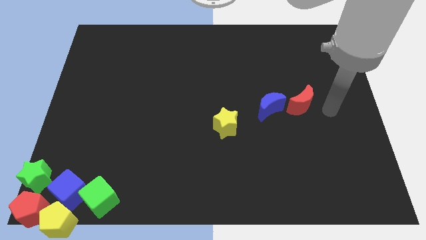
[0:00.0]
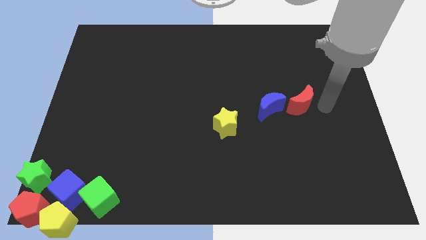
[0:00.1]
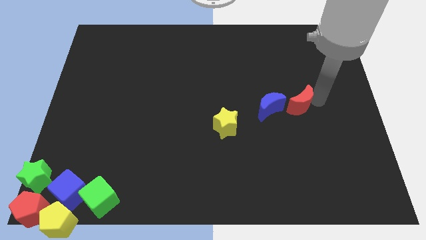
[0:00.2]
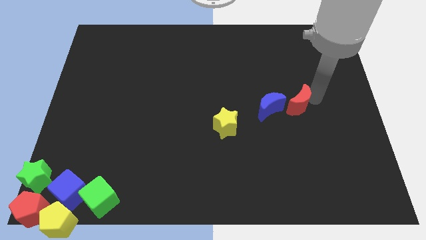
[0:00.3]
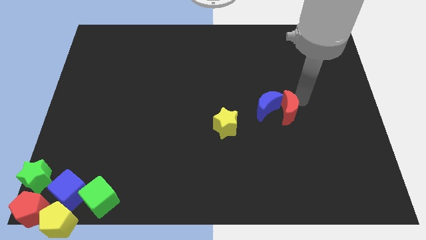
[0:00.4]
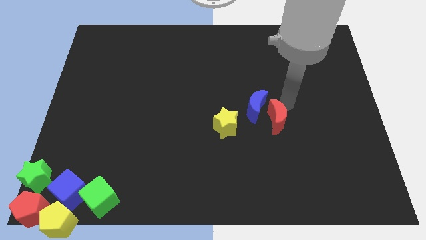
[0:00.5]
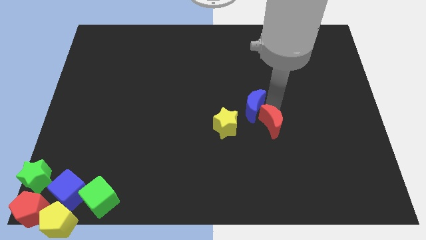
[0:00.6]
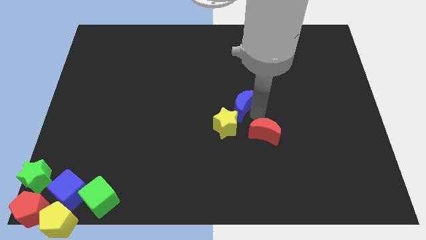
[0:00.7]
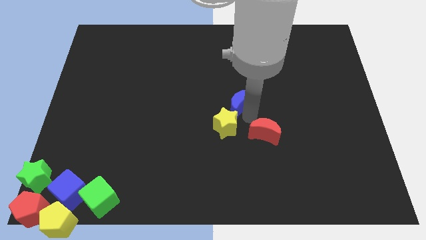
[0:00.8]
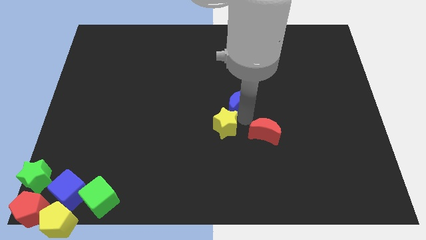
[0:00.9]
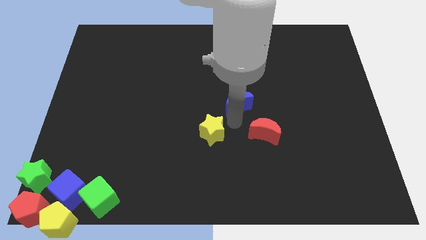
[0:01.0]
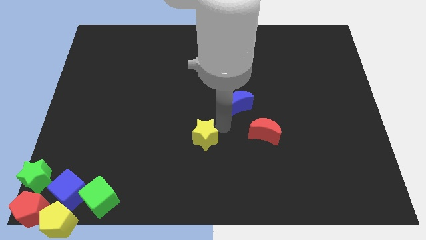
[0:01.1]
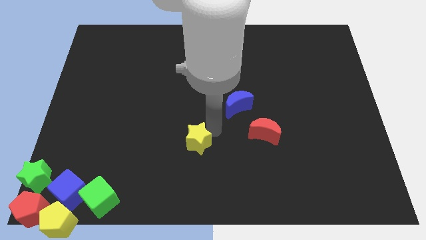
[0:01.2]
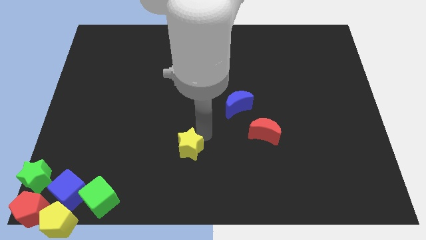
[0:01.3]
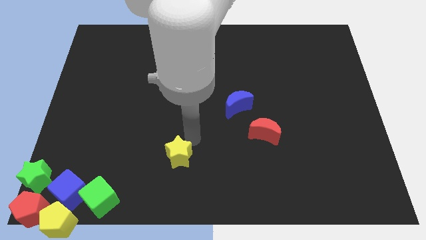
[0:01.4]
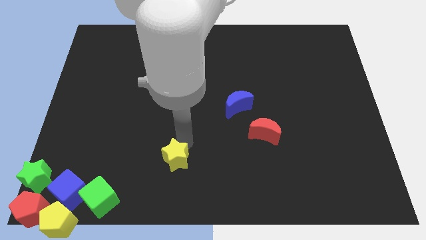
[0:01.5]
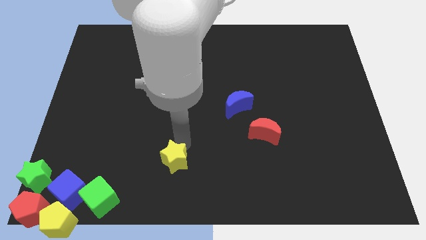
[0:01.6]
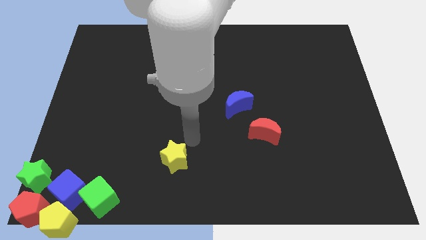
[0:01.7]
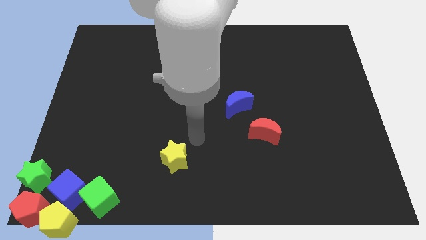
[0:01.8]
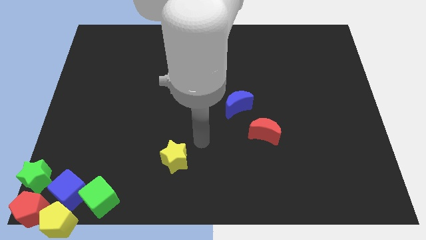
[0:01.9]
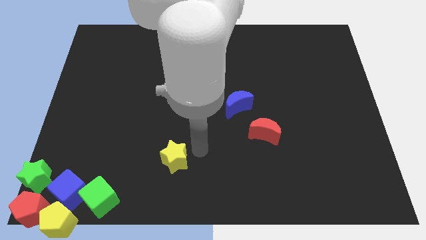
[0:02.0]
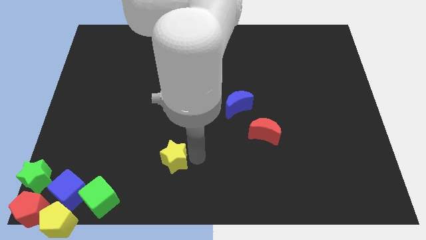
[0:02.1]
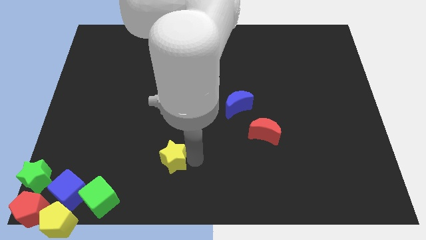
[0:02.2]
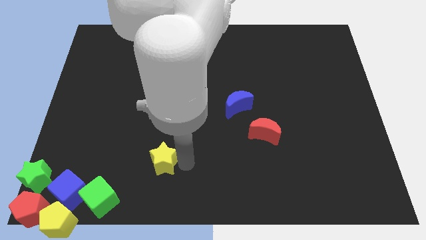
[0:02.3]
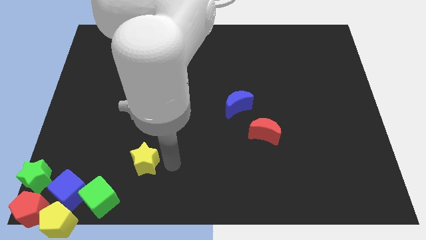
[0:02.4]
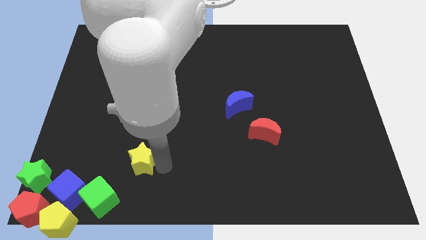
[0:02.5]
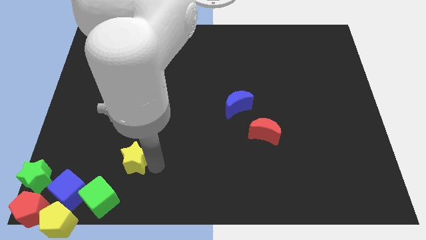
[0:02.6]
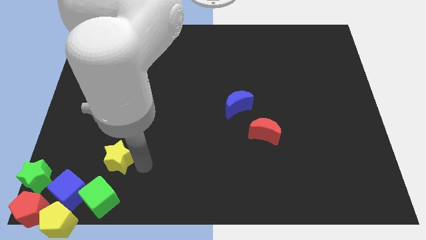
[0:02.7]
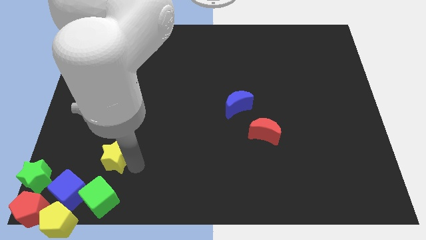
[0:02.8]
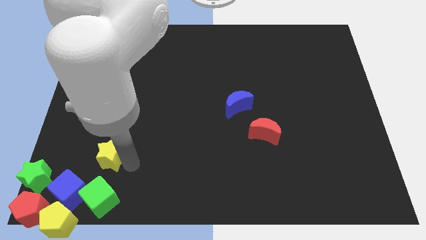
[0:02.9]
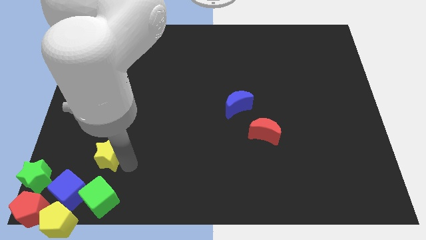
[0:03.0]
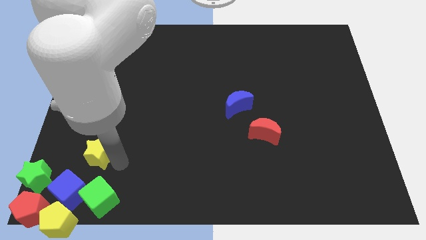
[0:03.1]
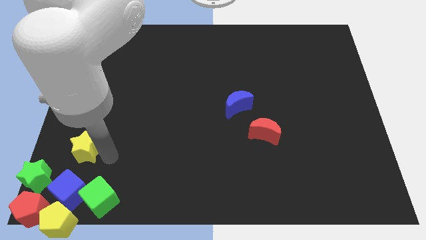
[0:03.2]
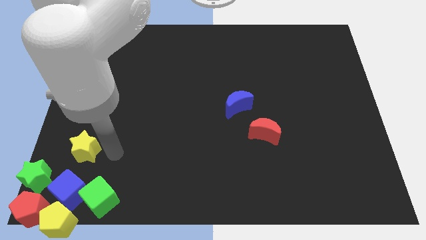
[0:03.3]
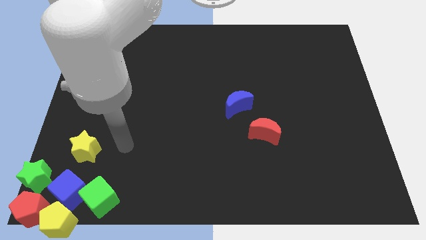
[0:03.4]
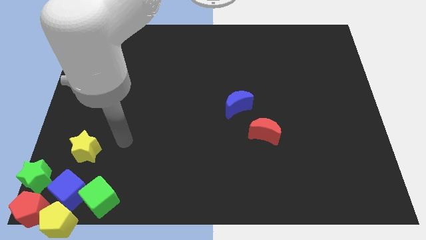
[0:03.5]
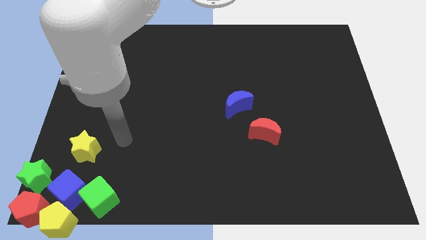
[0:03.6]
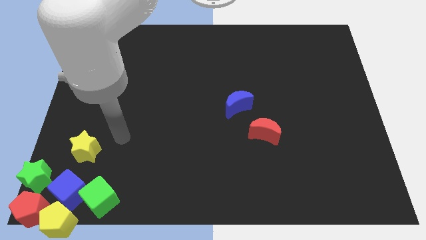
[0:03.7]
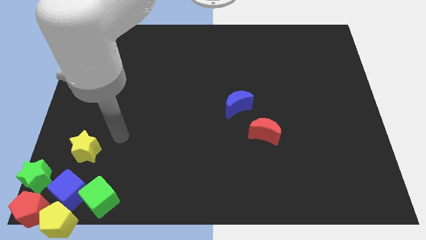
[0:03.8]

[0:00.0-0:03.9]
move the yellow star towards the left

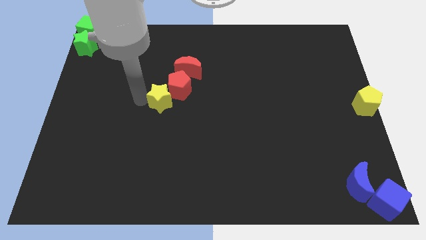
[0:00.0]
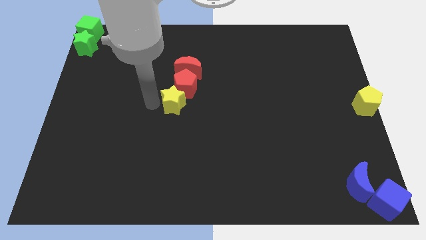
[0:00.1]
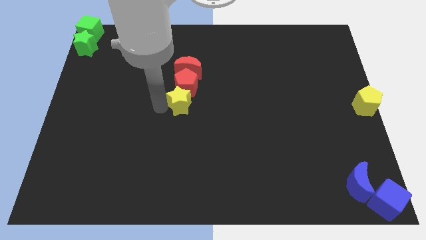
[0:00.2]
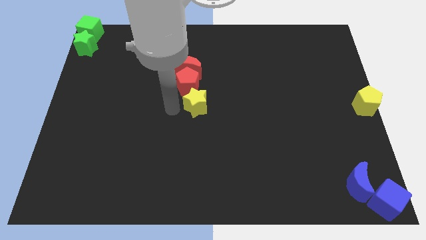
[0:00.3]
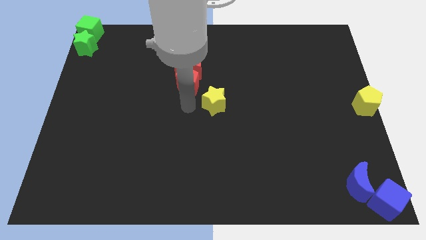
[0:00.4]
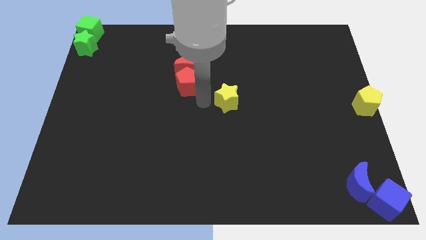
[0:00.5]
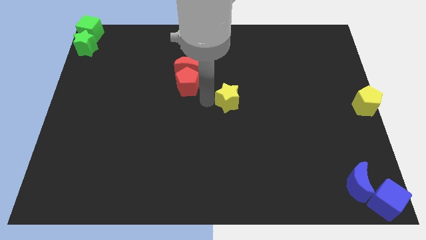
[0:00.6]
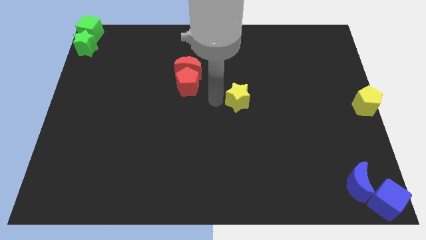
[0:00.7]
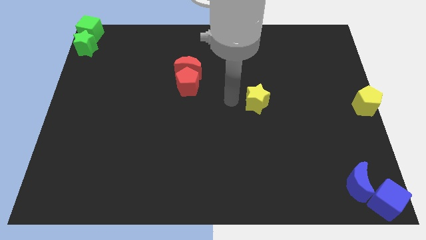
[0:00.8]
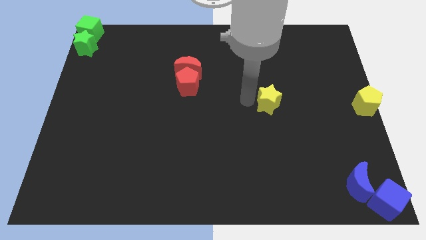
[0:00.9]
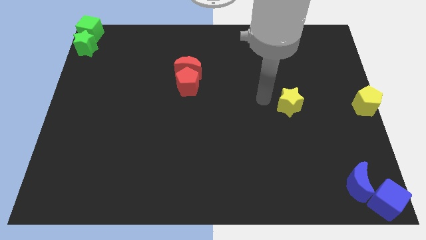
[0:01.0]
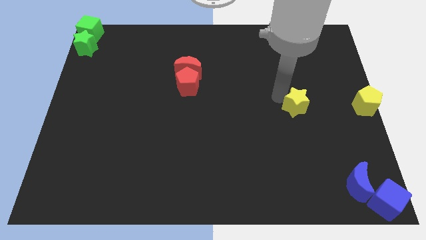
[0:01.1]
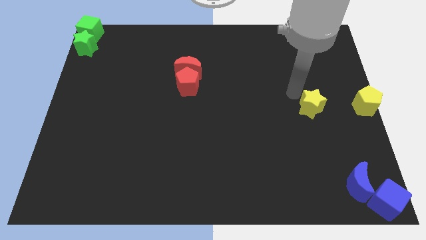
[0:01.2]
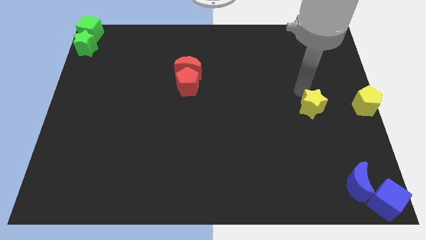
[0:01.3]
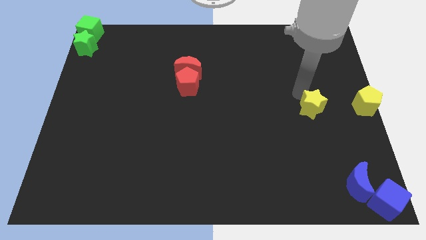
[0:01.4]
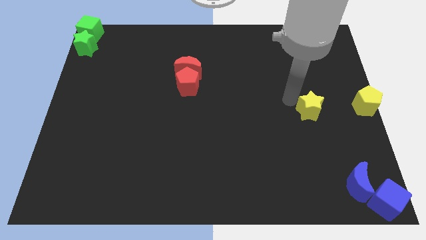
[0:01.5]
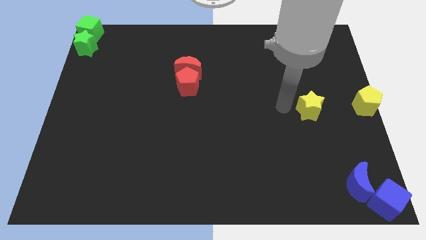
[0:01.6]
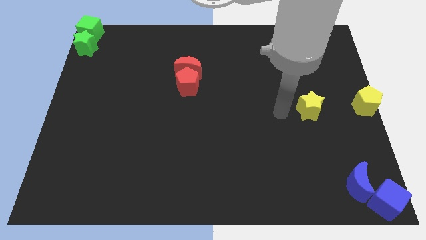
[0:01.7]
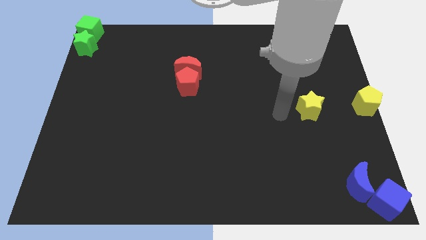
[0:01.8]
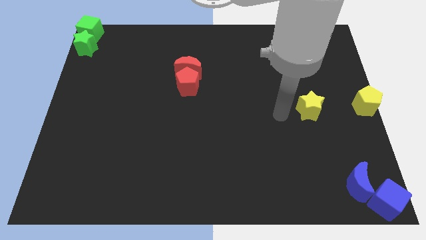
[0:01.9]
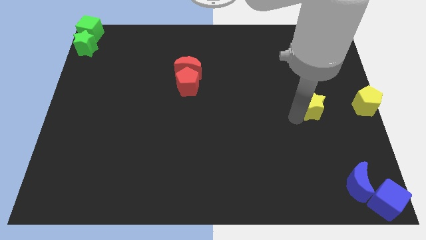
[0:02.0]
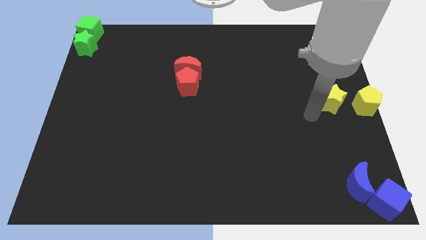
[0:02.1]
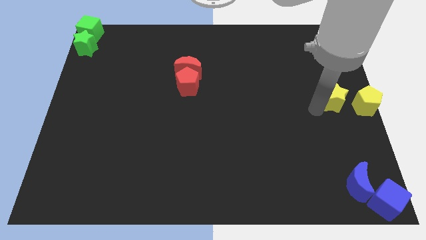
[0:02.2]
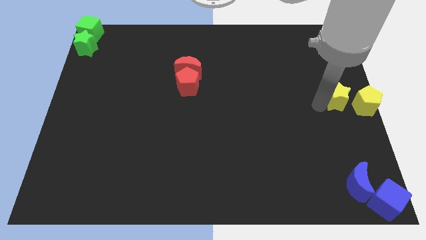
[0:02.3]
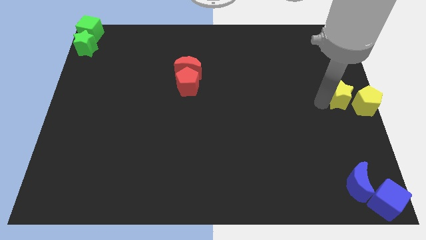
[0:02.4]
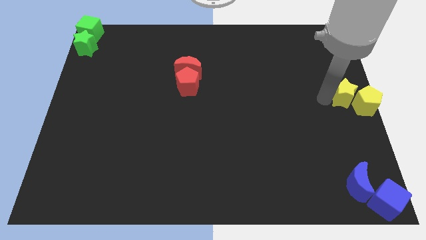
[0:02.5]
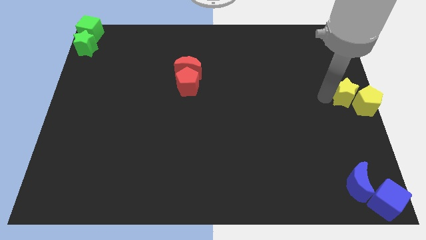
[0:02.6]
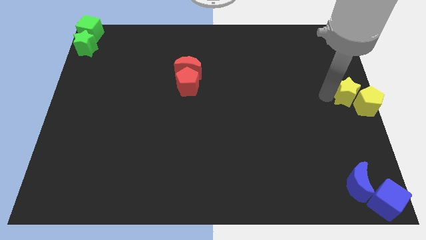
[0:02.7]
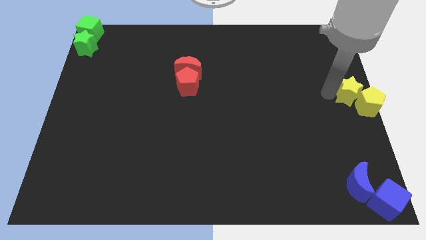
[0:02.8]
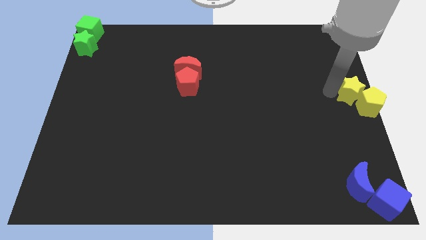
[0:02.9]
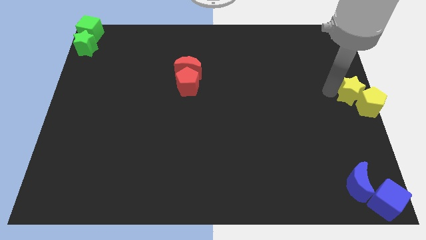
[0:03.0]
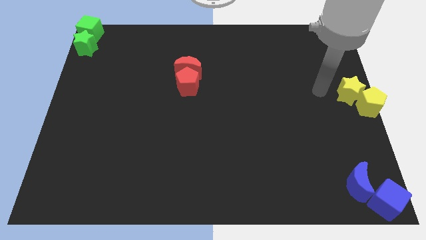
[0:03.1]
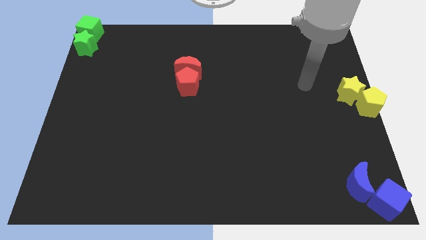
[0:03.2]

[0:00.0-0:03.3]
push yellow star in to yellow pentagon

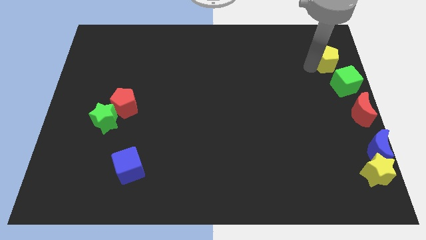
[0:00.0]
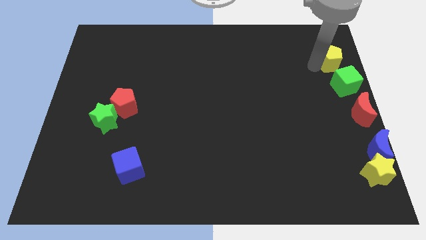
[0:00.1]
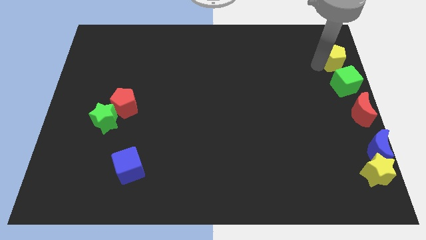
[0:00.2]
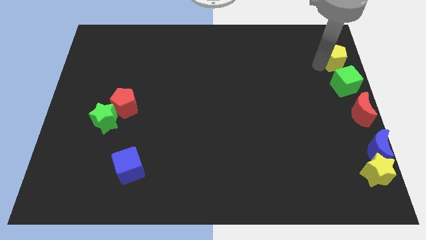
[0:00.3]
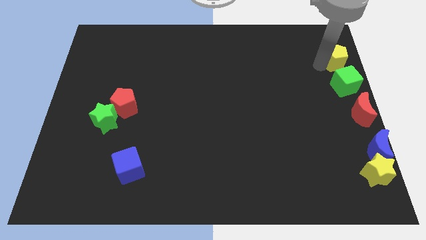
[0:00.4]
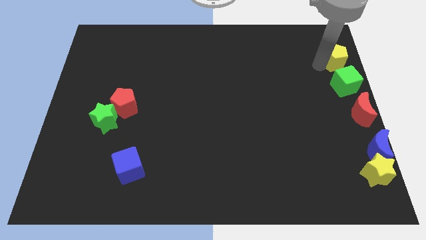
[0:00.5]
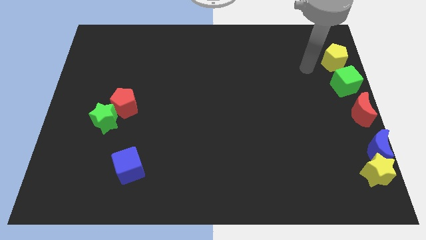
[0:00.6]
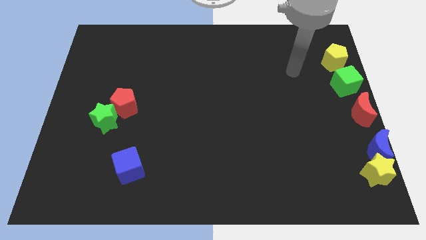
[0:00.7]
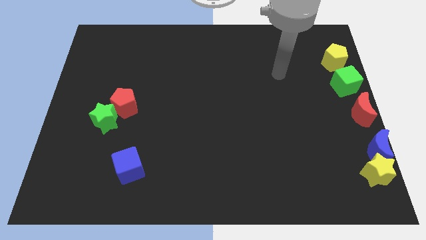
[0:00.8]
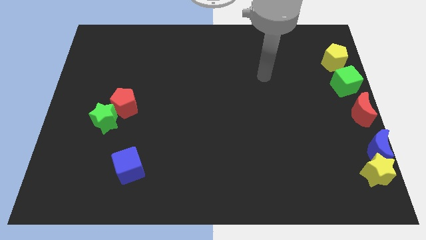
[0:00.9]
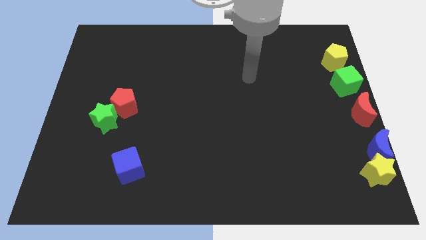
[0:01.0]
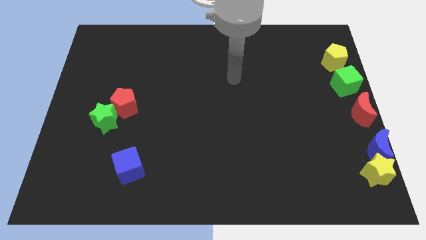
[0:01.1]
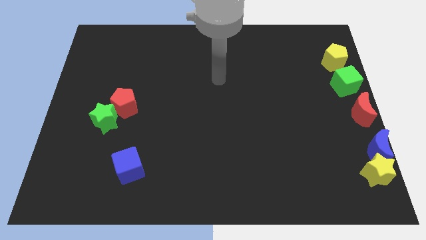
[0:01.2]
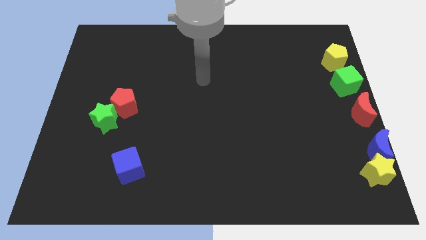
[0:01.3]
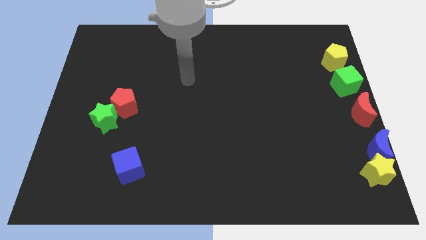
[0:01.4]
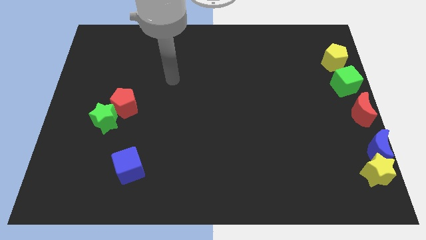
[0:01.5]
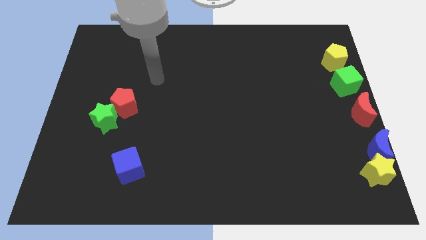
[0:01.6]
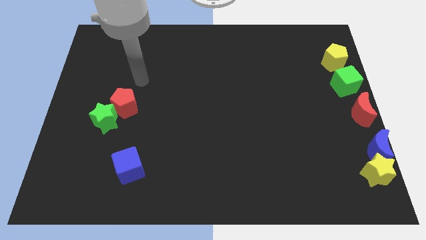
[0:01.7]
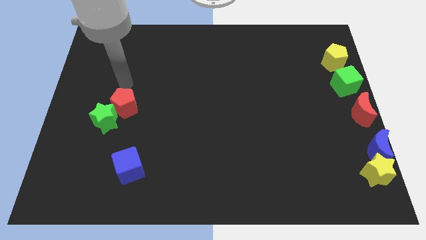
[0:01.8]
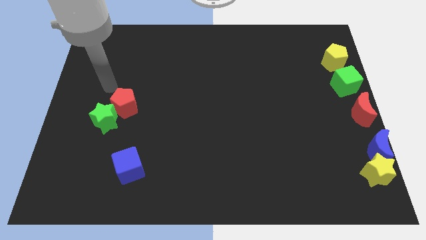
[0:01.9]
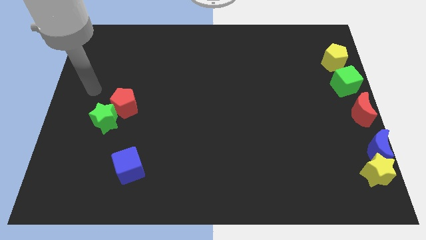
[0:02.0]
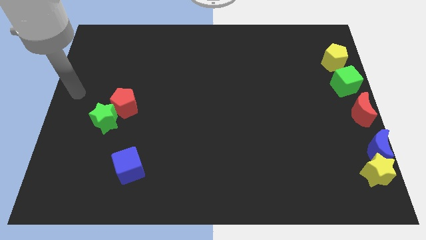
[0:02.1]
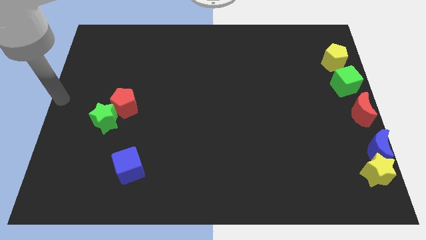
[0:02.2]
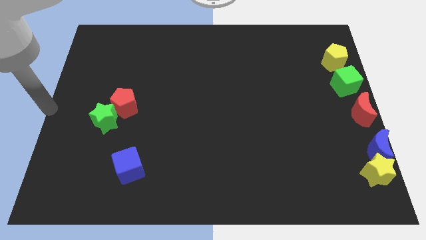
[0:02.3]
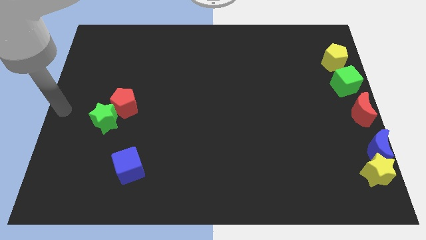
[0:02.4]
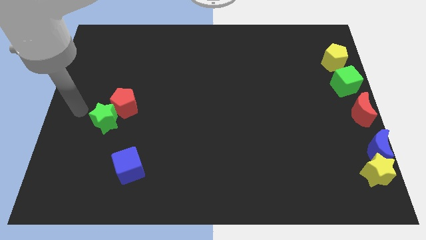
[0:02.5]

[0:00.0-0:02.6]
move your arm away from the yellow pentagon
